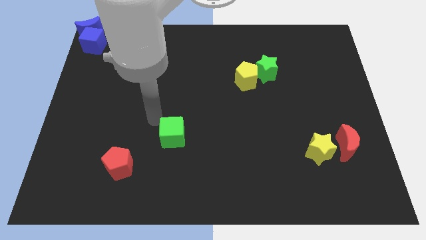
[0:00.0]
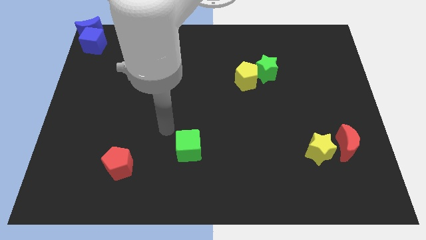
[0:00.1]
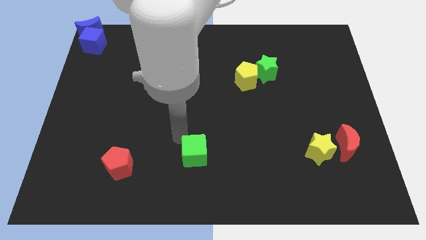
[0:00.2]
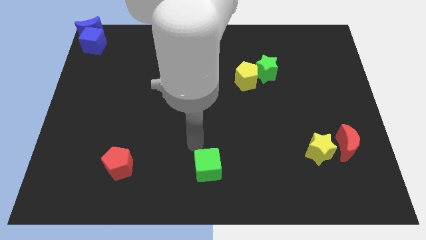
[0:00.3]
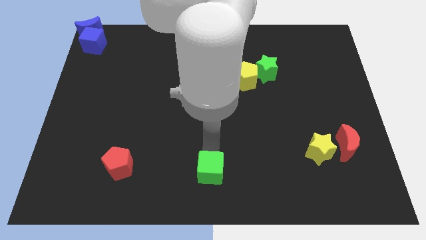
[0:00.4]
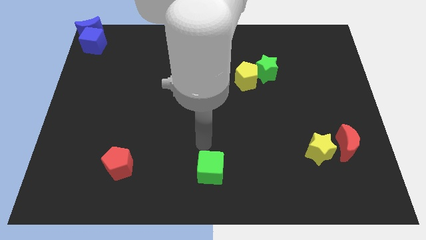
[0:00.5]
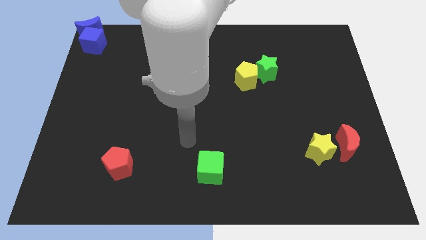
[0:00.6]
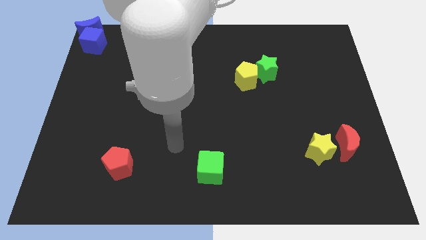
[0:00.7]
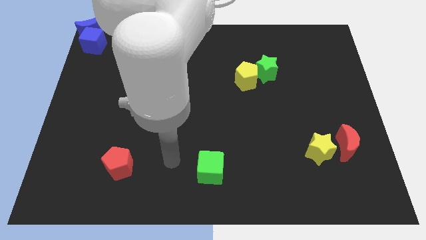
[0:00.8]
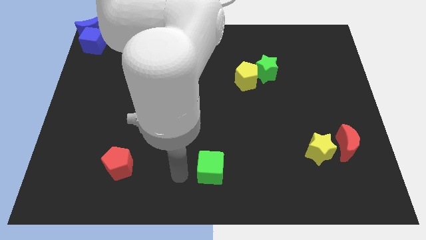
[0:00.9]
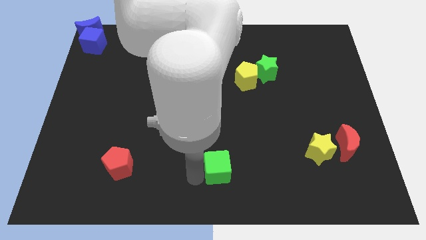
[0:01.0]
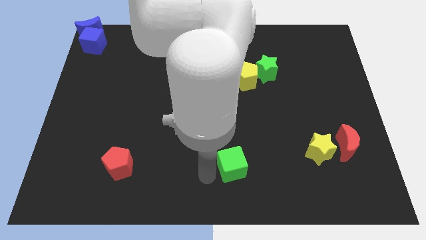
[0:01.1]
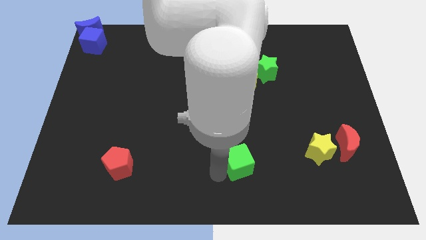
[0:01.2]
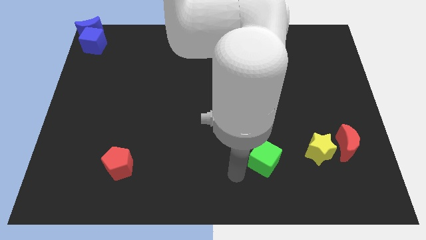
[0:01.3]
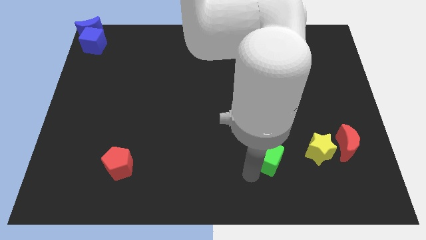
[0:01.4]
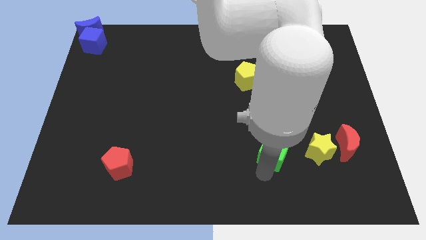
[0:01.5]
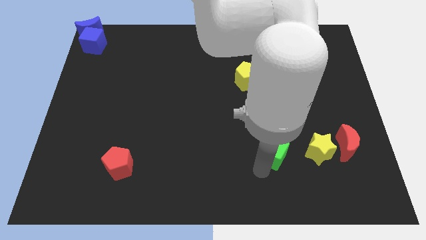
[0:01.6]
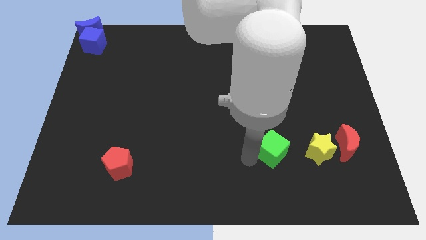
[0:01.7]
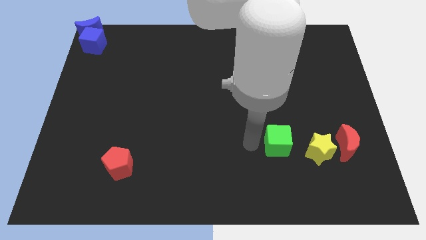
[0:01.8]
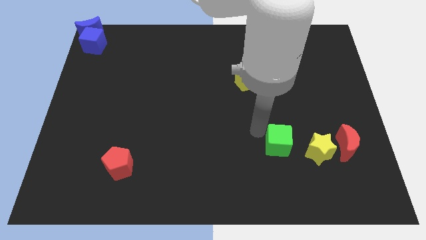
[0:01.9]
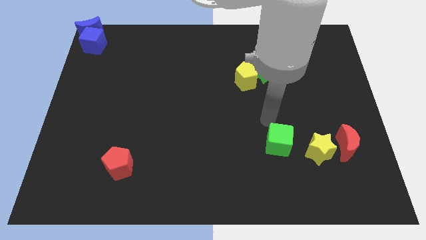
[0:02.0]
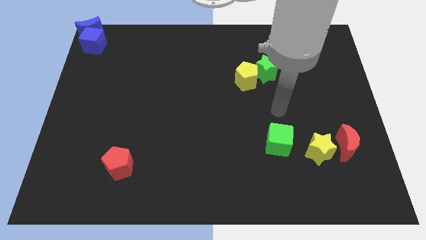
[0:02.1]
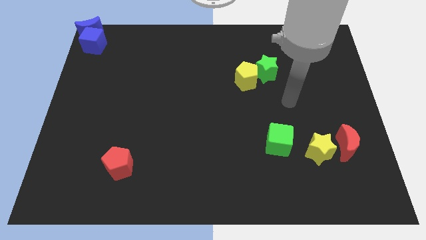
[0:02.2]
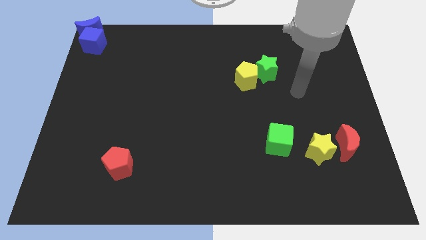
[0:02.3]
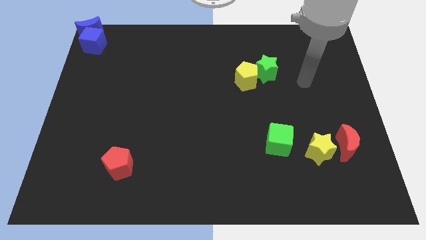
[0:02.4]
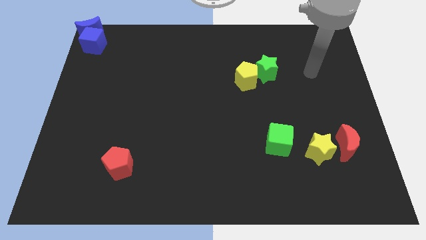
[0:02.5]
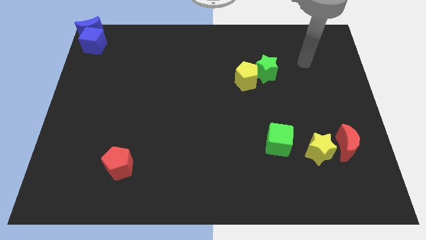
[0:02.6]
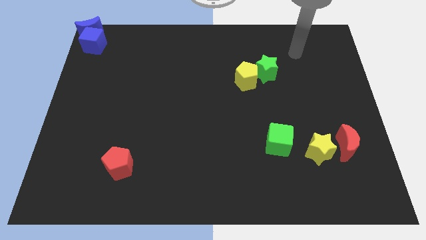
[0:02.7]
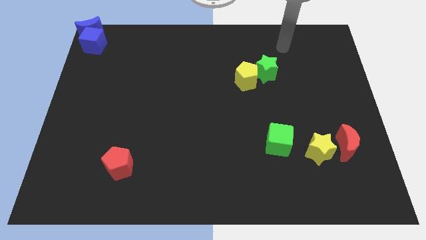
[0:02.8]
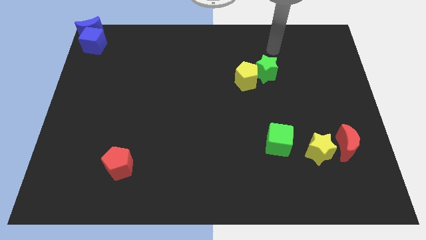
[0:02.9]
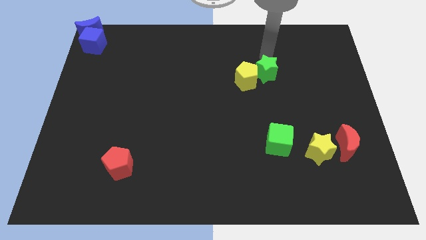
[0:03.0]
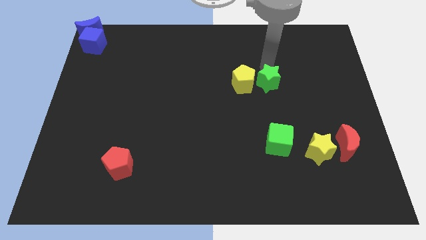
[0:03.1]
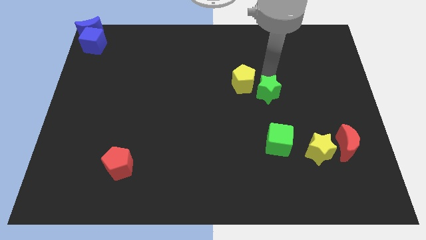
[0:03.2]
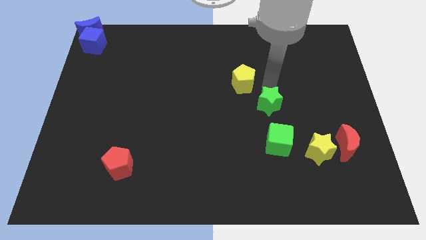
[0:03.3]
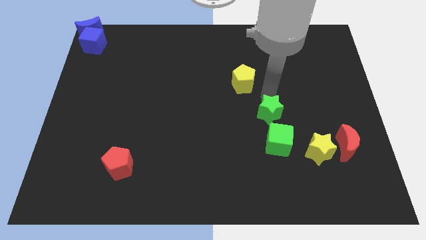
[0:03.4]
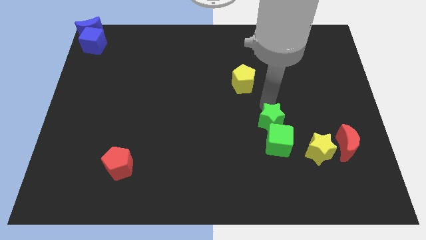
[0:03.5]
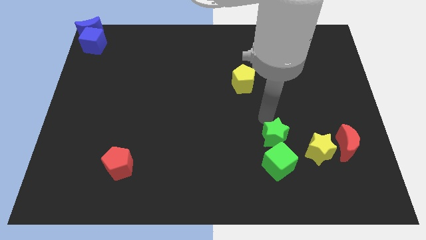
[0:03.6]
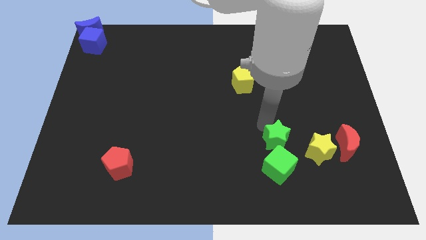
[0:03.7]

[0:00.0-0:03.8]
push the green star into the green cube

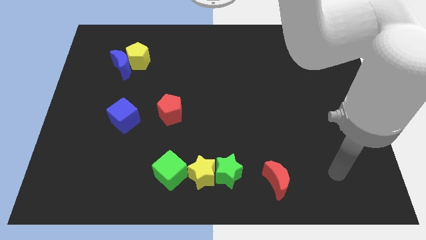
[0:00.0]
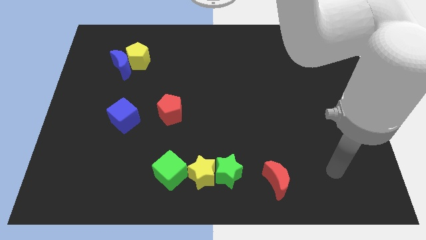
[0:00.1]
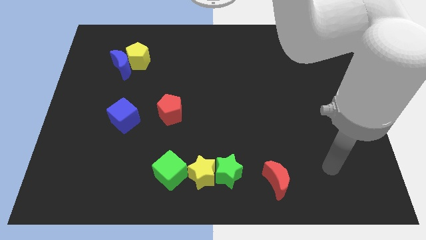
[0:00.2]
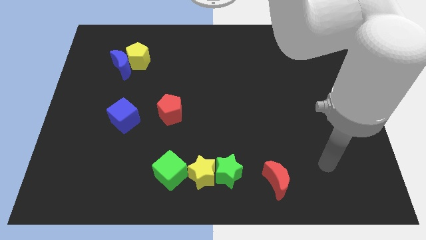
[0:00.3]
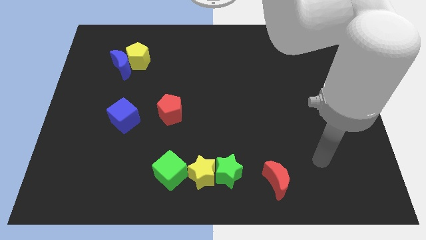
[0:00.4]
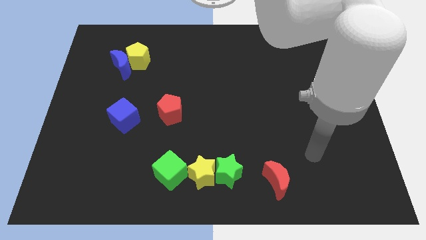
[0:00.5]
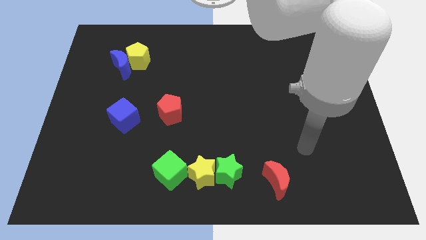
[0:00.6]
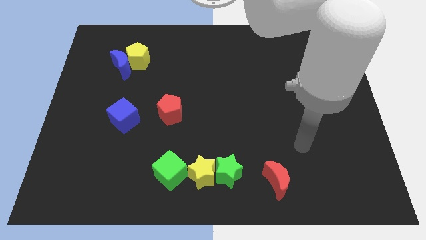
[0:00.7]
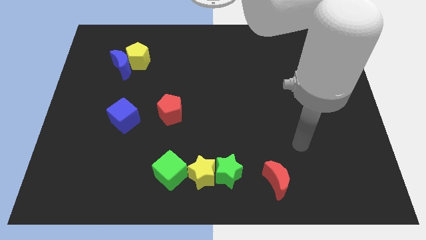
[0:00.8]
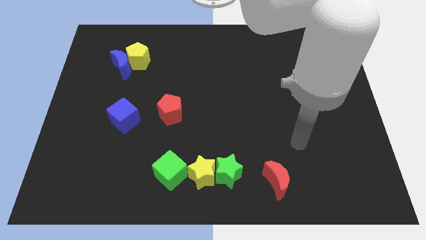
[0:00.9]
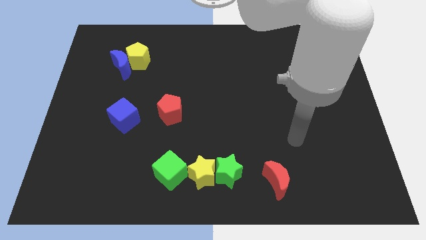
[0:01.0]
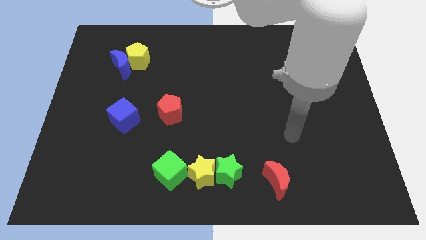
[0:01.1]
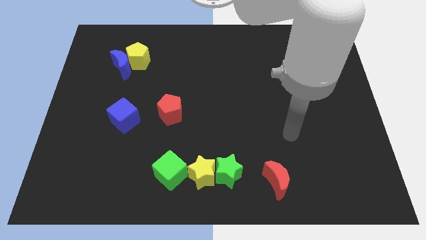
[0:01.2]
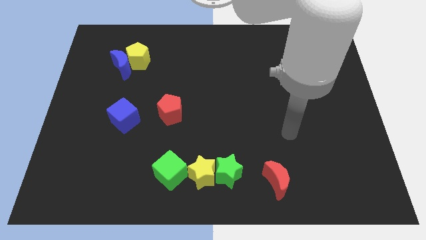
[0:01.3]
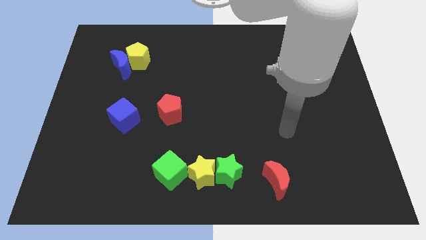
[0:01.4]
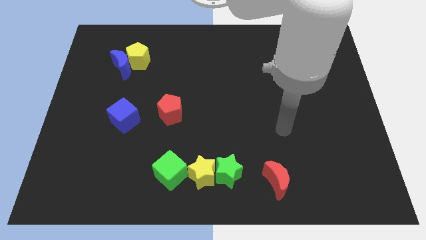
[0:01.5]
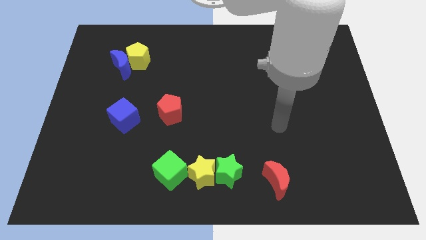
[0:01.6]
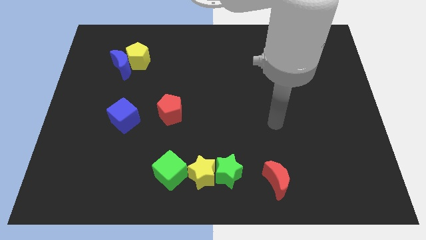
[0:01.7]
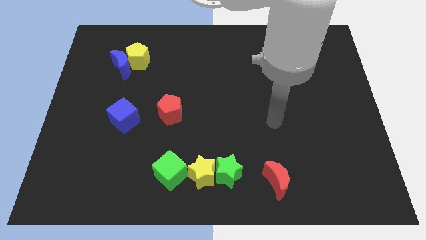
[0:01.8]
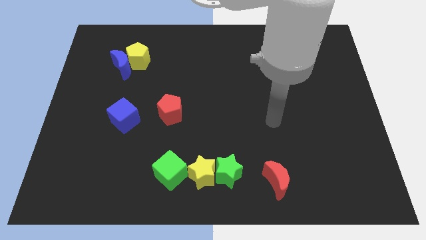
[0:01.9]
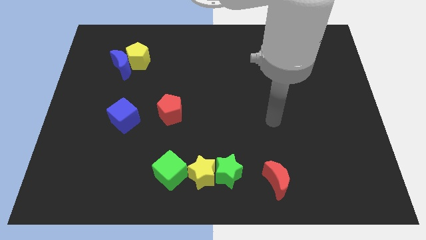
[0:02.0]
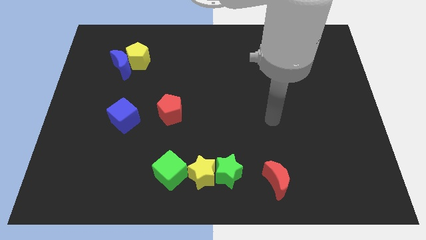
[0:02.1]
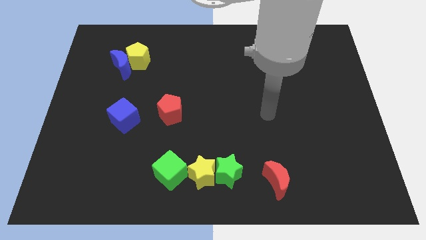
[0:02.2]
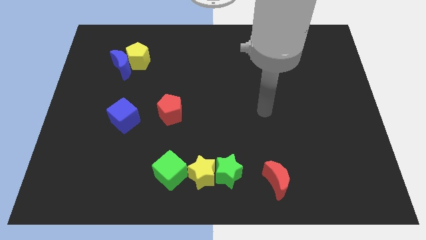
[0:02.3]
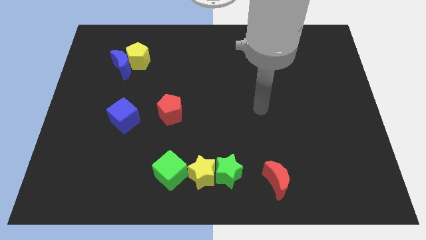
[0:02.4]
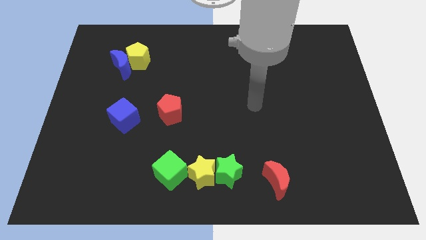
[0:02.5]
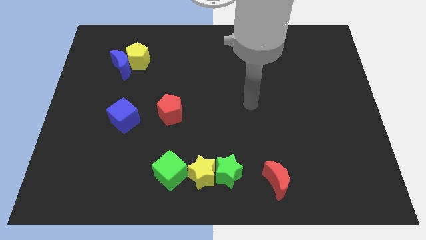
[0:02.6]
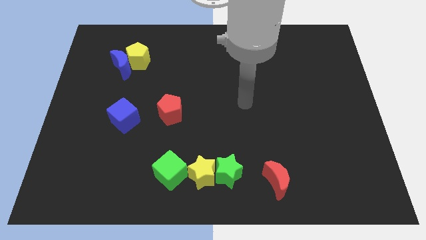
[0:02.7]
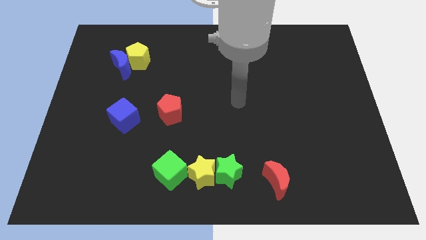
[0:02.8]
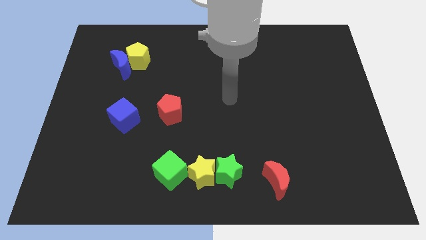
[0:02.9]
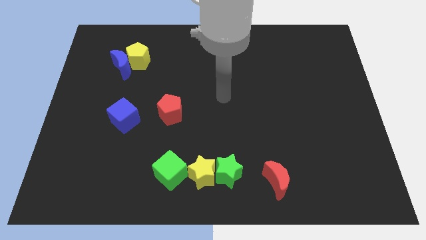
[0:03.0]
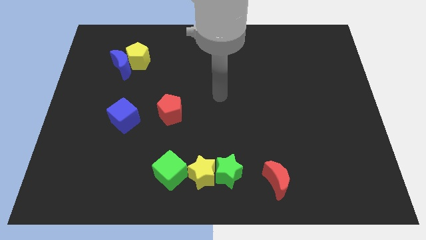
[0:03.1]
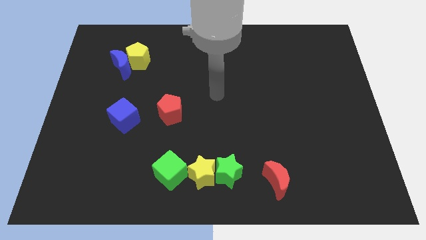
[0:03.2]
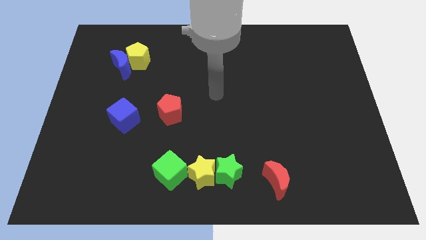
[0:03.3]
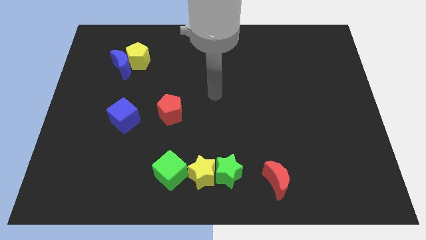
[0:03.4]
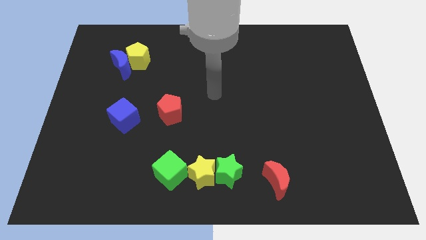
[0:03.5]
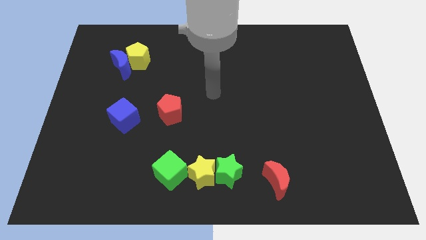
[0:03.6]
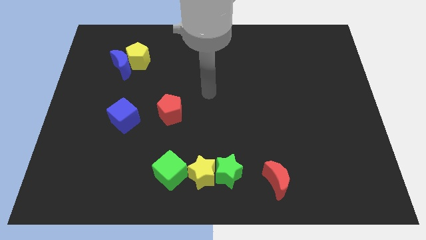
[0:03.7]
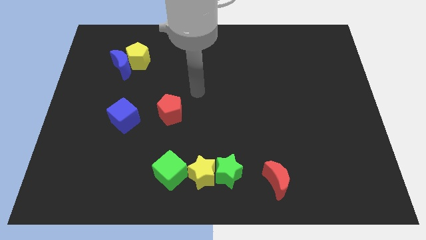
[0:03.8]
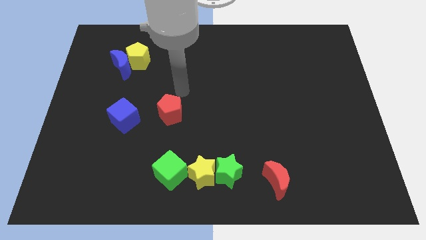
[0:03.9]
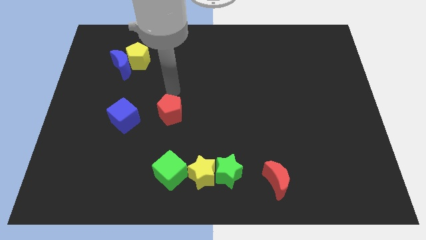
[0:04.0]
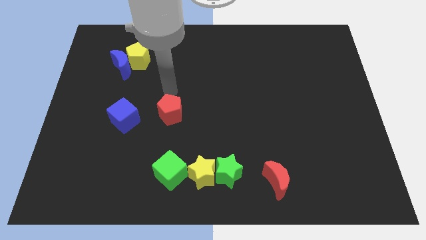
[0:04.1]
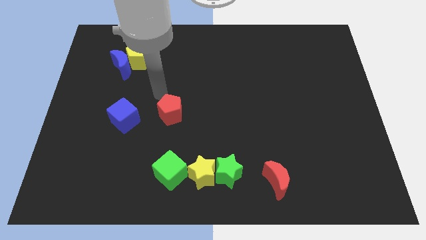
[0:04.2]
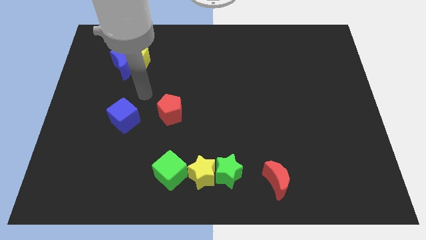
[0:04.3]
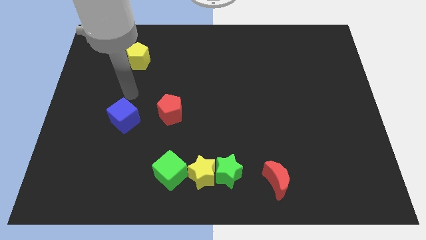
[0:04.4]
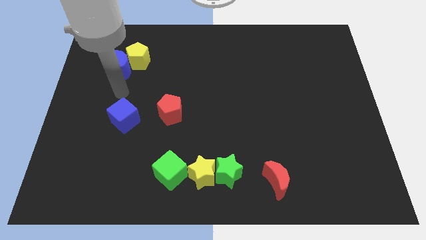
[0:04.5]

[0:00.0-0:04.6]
place the above the blue cube

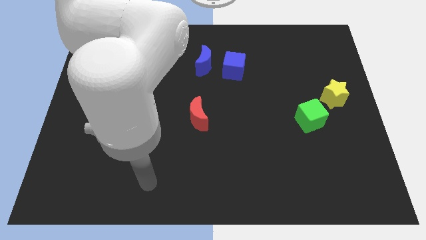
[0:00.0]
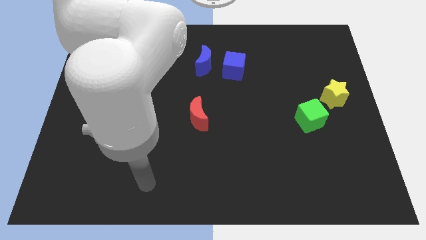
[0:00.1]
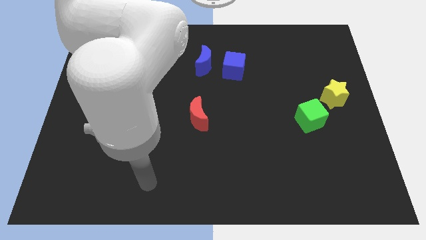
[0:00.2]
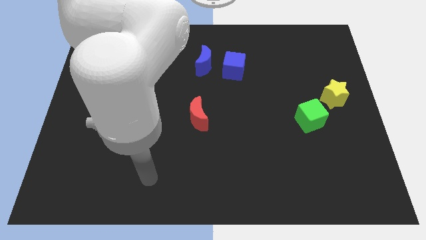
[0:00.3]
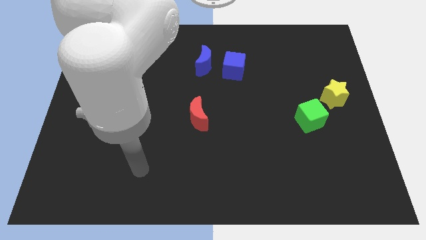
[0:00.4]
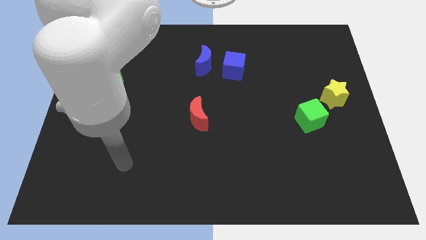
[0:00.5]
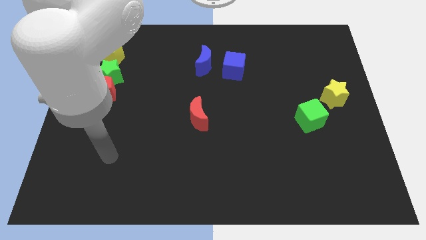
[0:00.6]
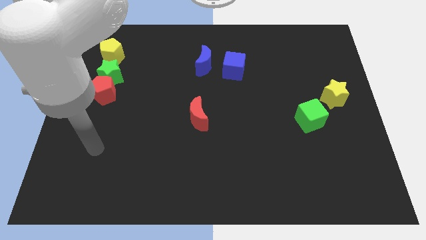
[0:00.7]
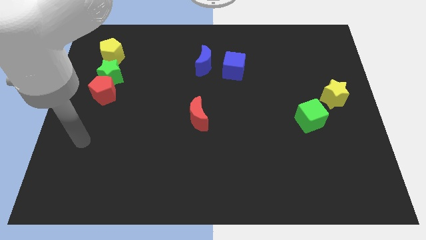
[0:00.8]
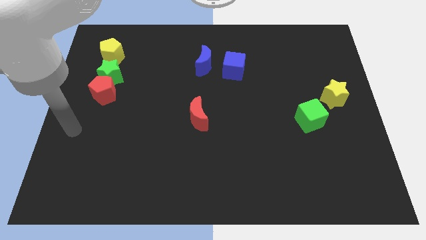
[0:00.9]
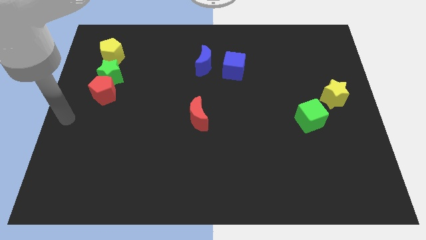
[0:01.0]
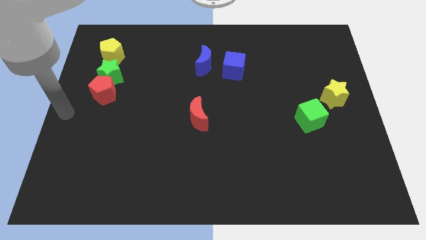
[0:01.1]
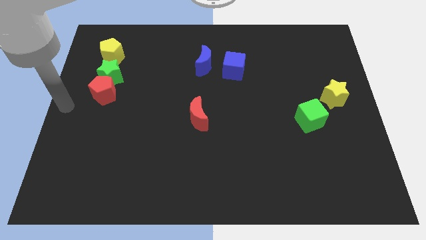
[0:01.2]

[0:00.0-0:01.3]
point your arm at the center left side of the board
